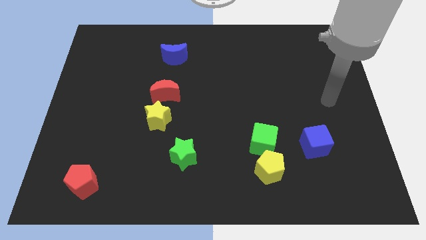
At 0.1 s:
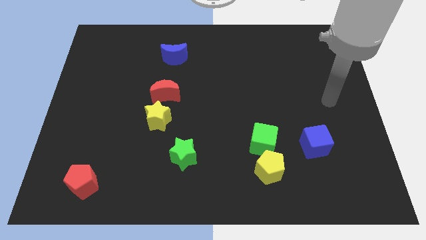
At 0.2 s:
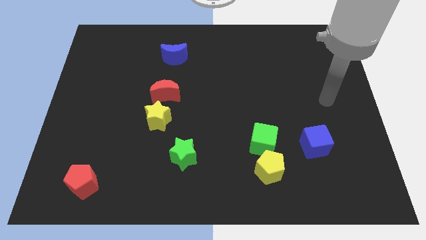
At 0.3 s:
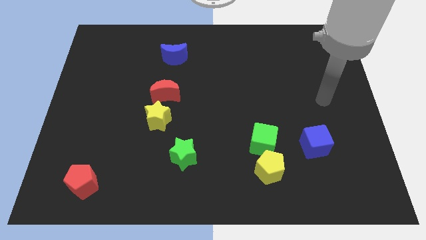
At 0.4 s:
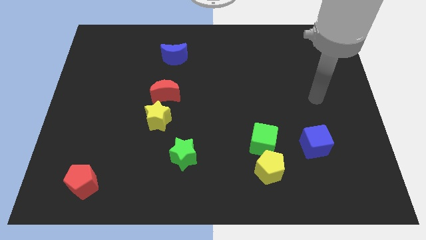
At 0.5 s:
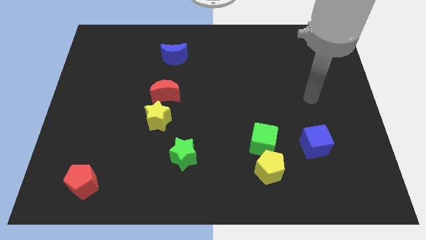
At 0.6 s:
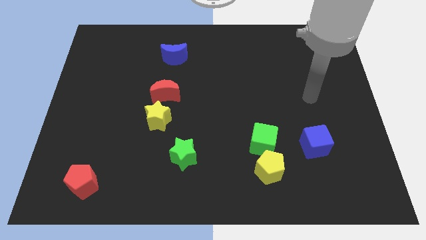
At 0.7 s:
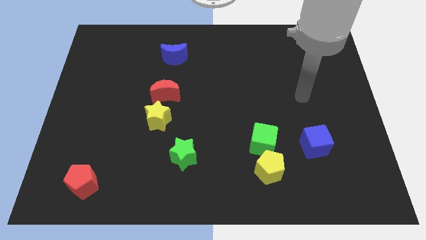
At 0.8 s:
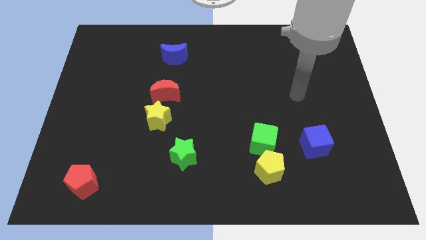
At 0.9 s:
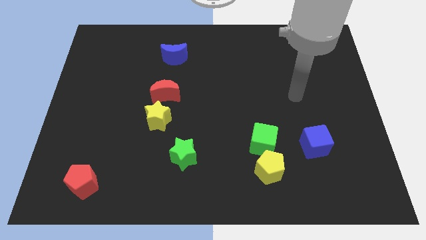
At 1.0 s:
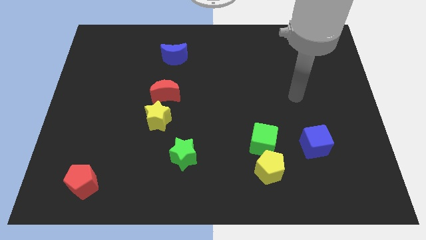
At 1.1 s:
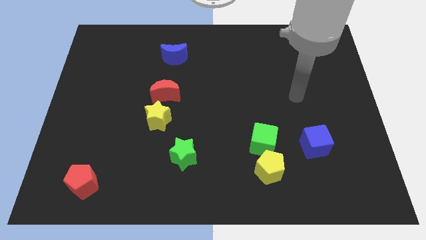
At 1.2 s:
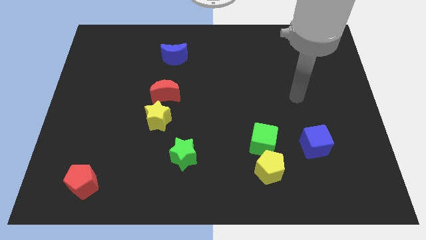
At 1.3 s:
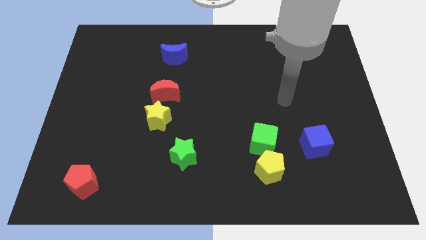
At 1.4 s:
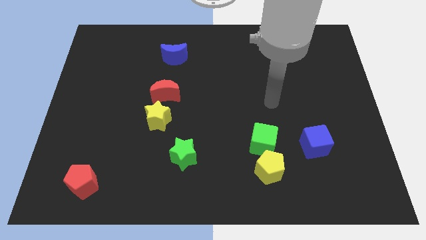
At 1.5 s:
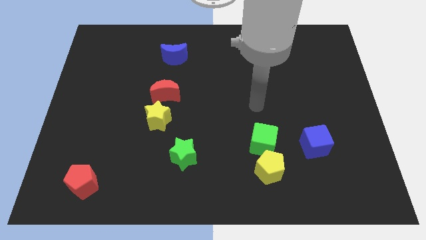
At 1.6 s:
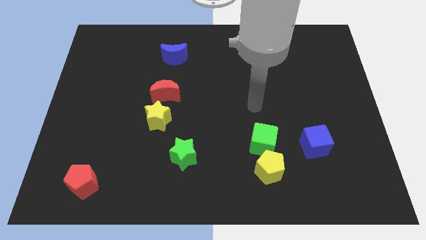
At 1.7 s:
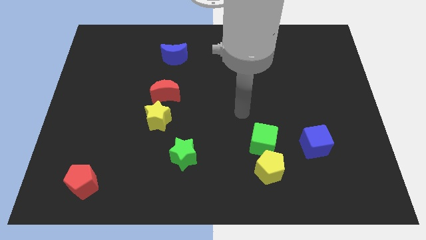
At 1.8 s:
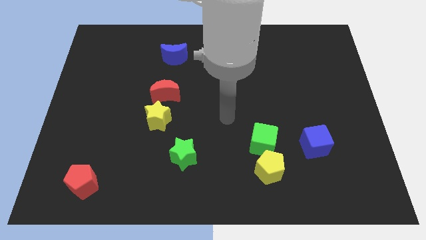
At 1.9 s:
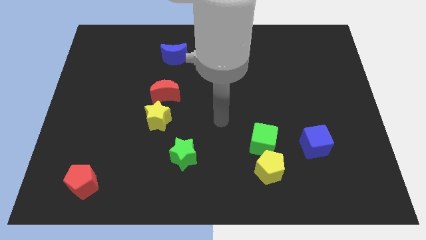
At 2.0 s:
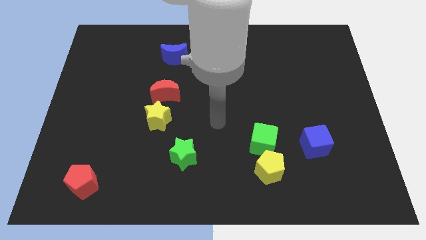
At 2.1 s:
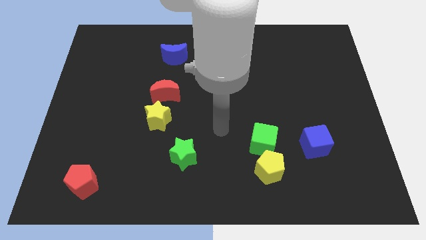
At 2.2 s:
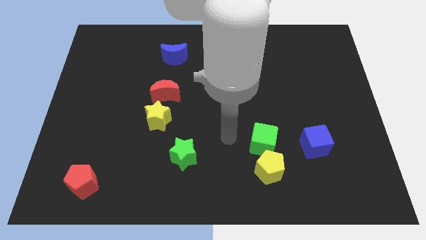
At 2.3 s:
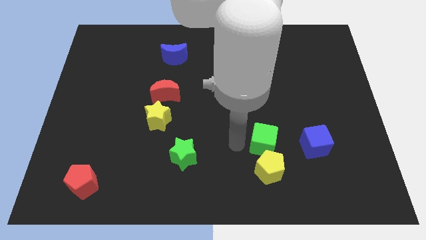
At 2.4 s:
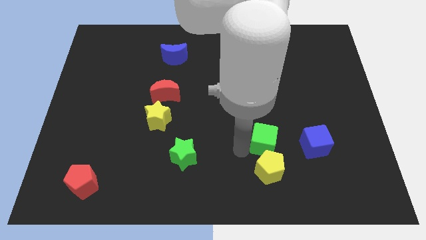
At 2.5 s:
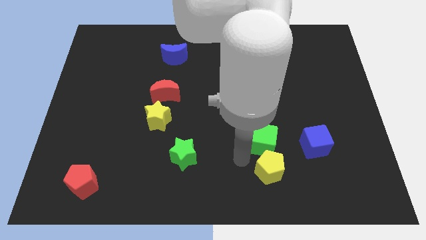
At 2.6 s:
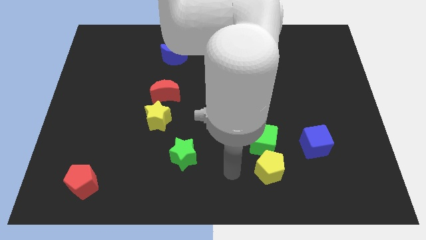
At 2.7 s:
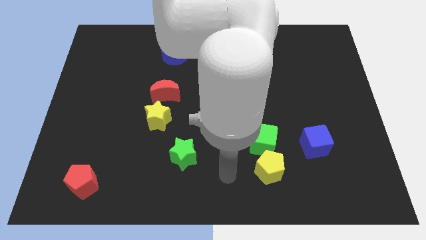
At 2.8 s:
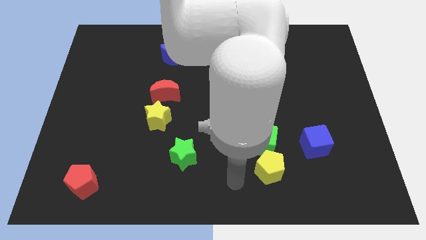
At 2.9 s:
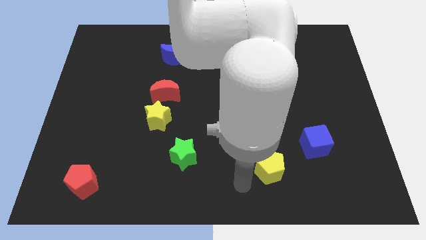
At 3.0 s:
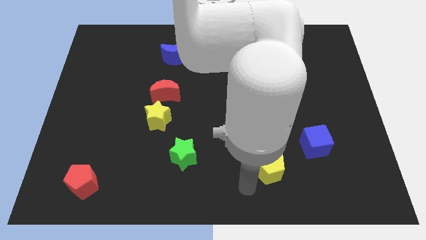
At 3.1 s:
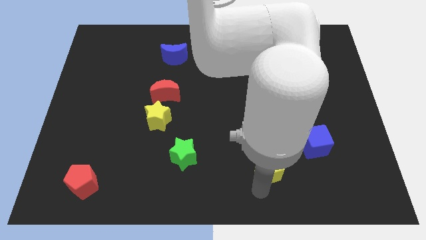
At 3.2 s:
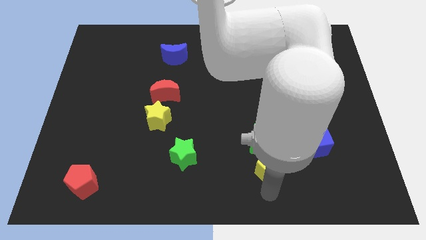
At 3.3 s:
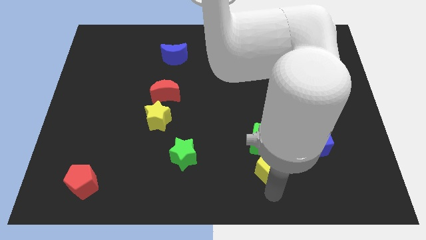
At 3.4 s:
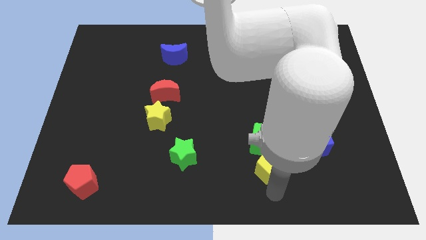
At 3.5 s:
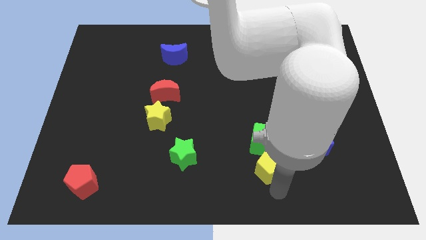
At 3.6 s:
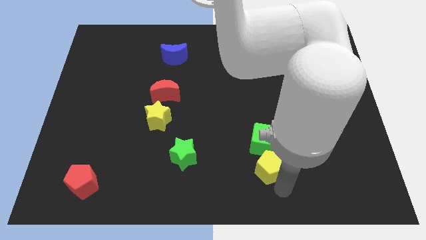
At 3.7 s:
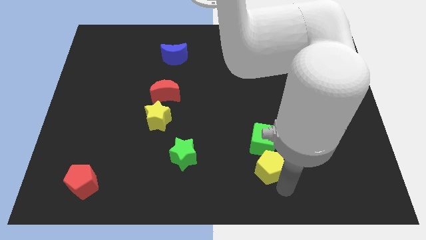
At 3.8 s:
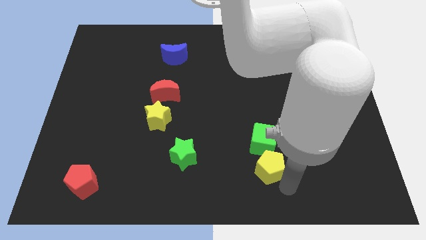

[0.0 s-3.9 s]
place your arm below yellow pentagon

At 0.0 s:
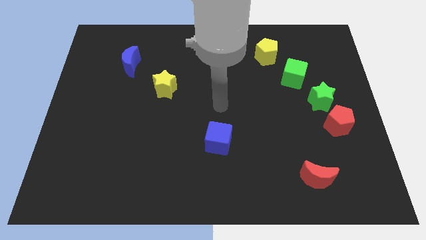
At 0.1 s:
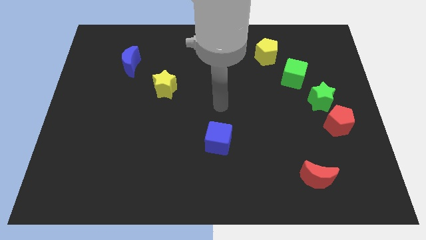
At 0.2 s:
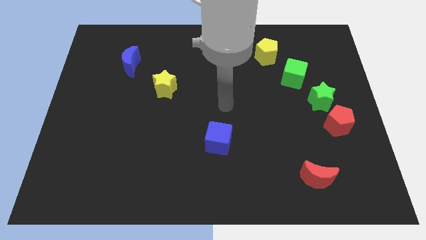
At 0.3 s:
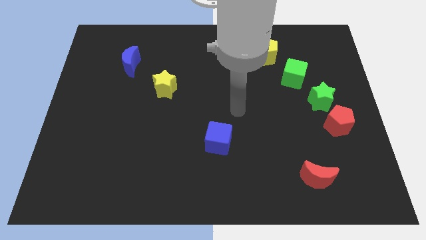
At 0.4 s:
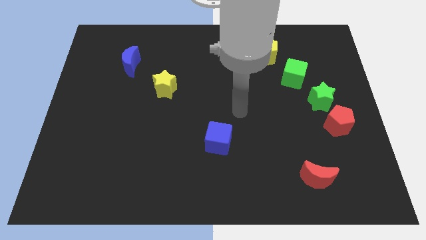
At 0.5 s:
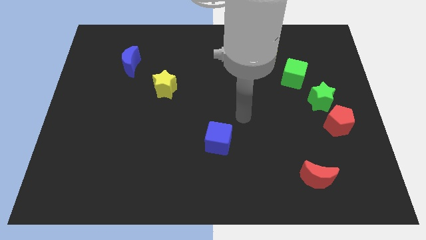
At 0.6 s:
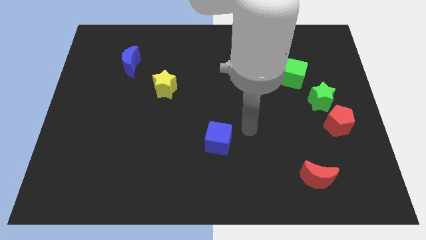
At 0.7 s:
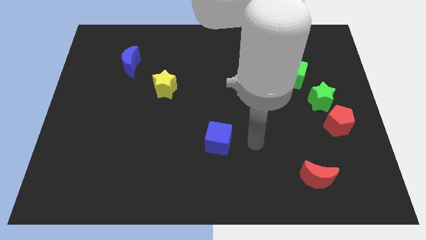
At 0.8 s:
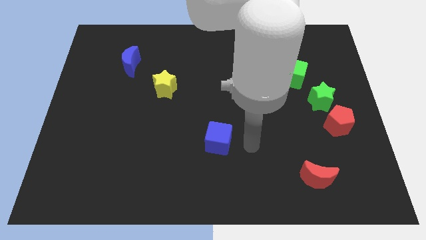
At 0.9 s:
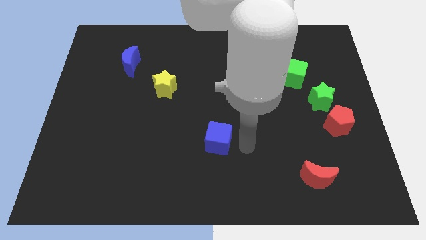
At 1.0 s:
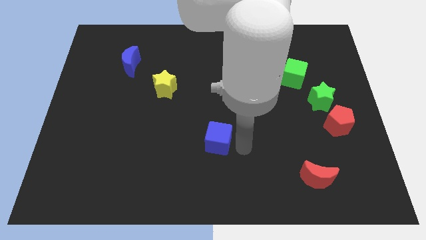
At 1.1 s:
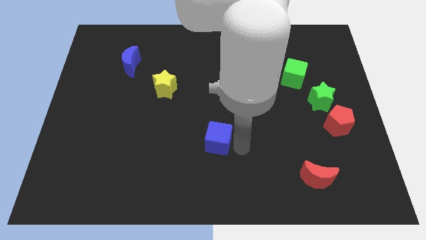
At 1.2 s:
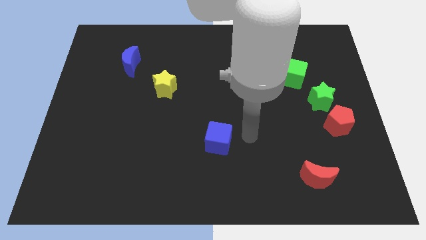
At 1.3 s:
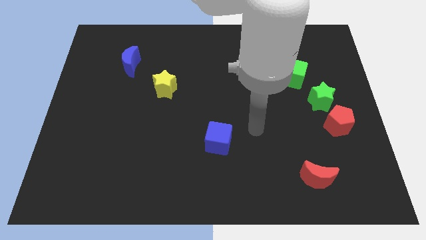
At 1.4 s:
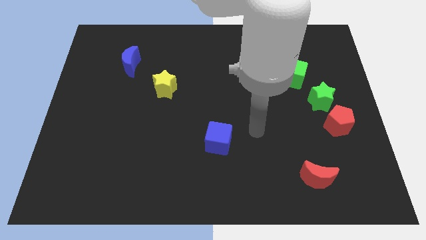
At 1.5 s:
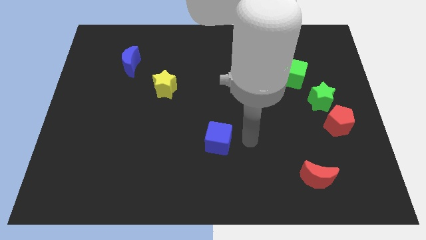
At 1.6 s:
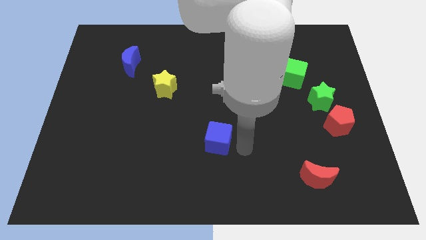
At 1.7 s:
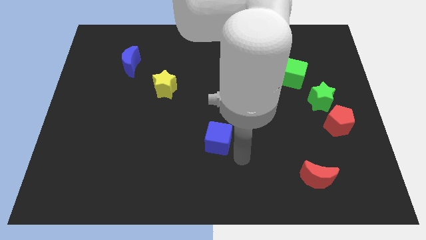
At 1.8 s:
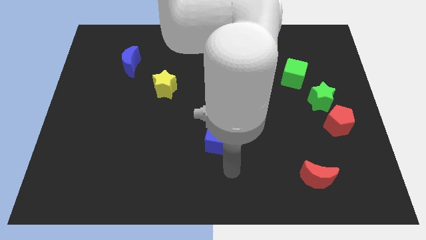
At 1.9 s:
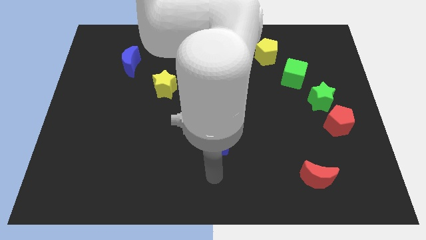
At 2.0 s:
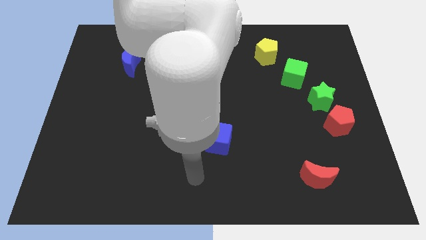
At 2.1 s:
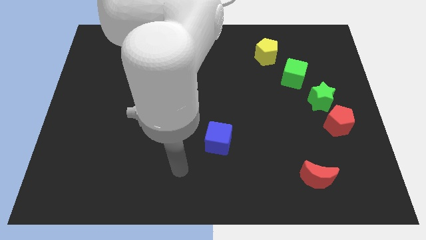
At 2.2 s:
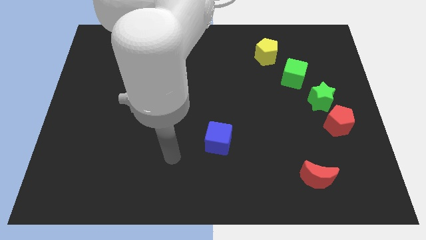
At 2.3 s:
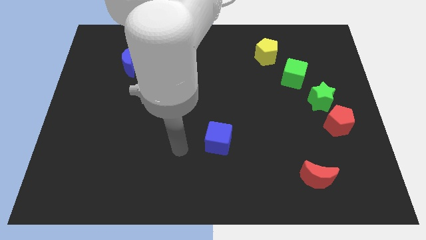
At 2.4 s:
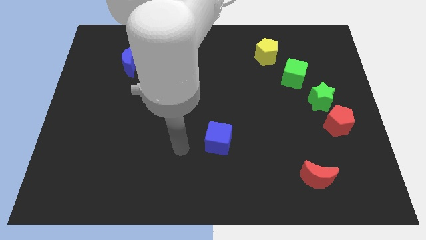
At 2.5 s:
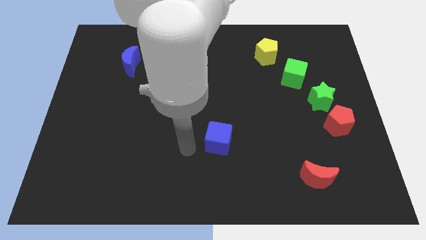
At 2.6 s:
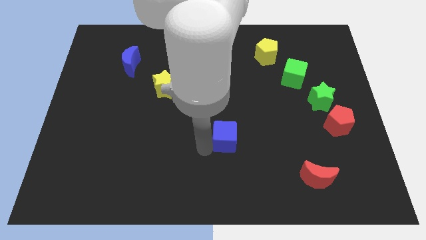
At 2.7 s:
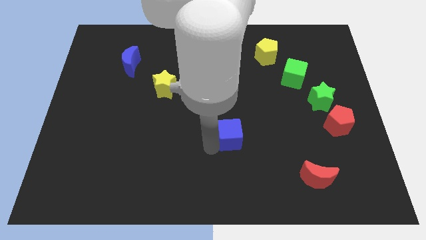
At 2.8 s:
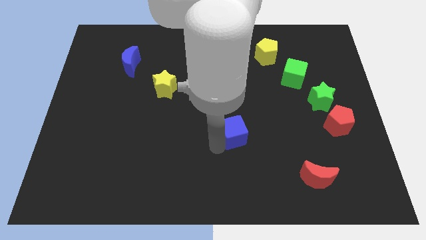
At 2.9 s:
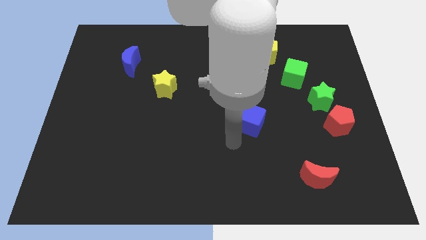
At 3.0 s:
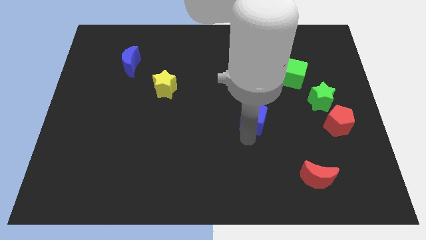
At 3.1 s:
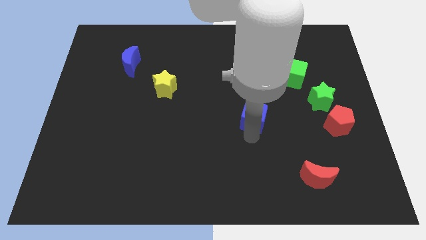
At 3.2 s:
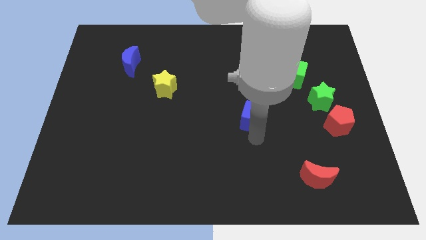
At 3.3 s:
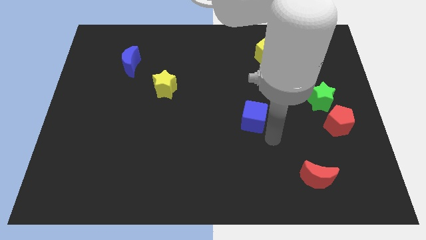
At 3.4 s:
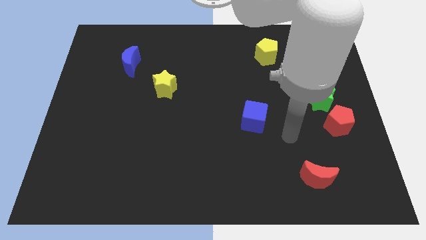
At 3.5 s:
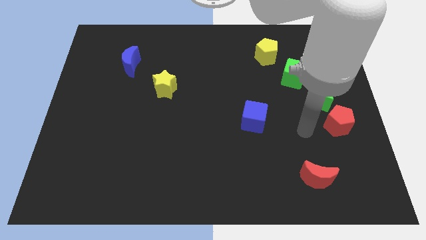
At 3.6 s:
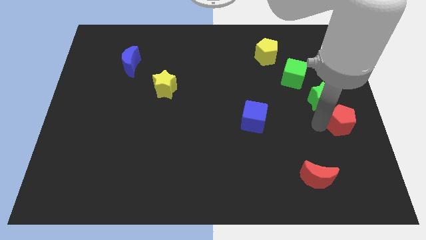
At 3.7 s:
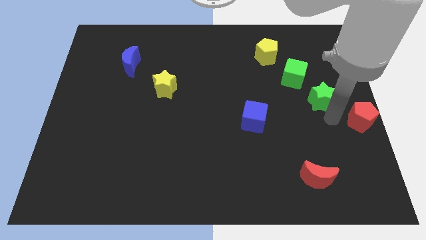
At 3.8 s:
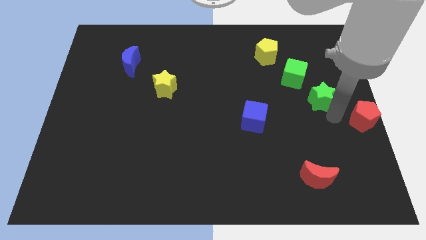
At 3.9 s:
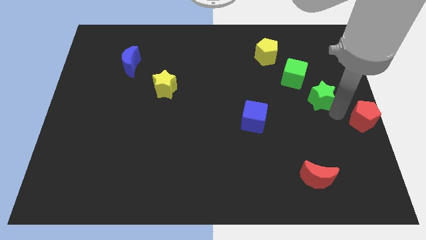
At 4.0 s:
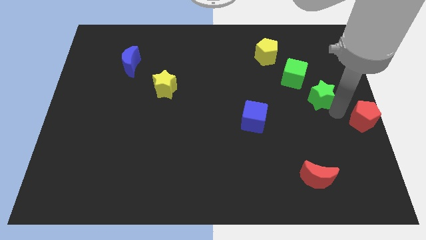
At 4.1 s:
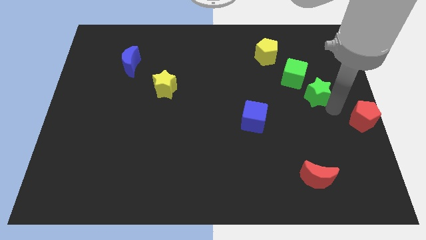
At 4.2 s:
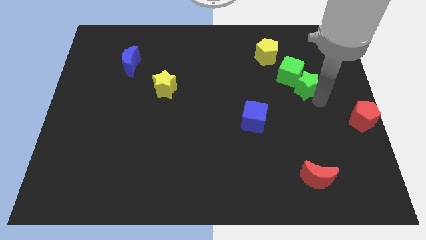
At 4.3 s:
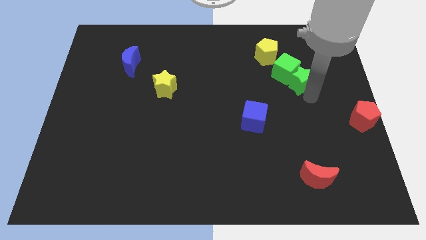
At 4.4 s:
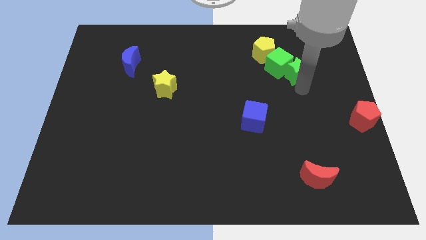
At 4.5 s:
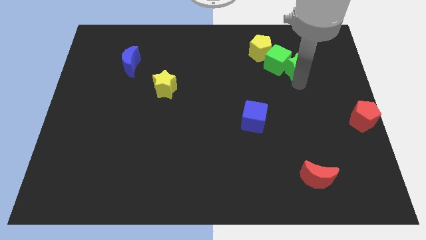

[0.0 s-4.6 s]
move the blue cube towards the center of the board

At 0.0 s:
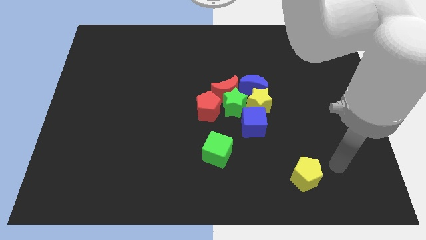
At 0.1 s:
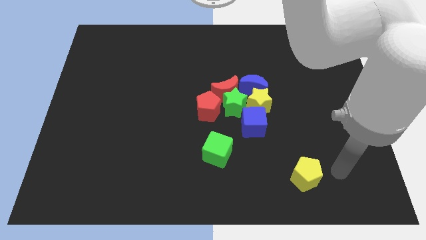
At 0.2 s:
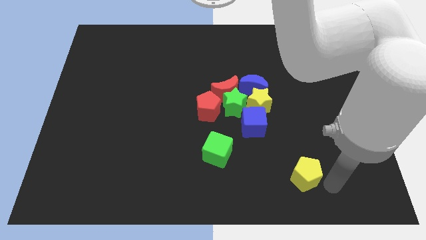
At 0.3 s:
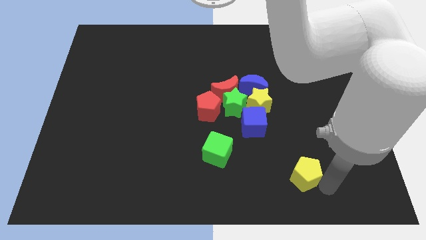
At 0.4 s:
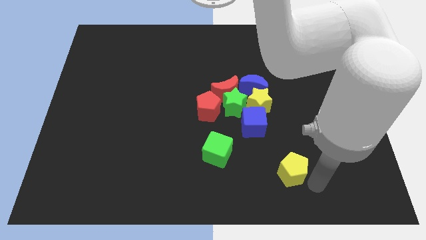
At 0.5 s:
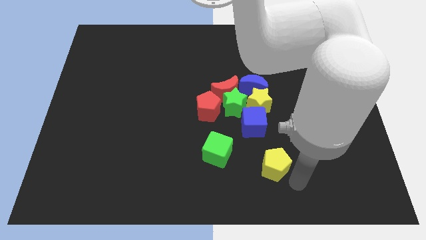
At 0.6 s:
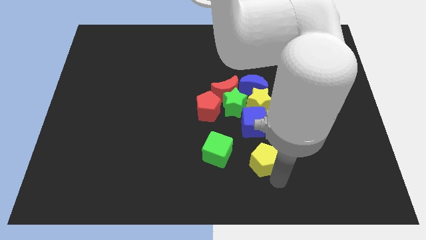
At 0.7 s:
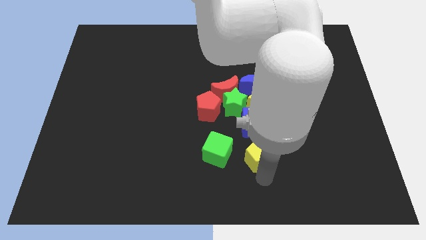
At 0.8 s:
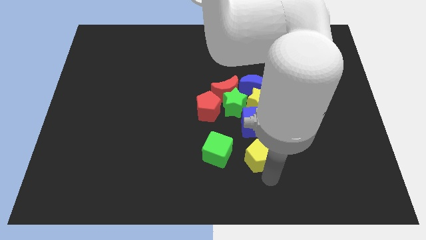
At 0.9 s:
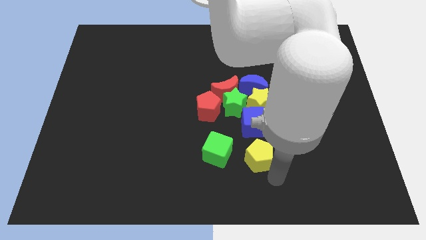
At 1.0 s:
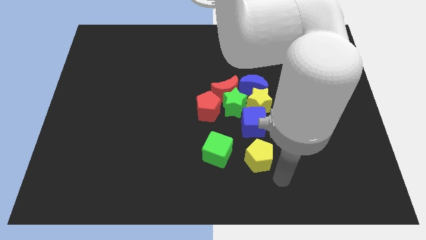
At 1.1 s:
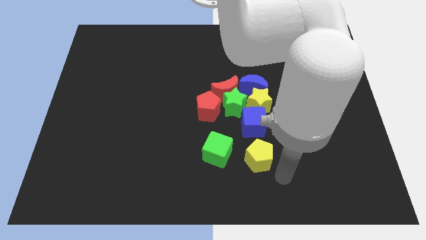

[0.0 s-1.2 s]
move yellow pentagon towards green cube
